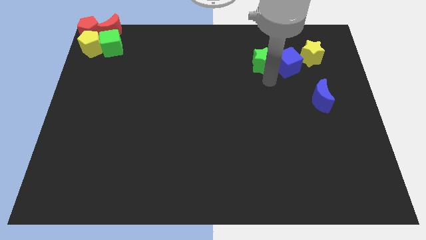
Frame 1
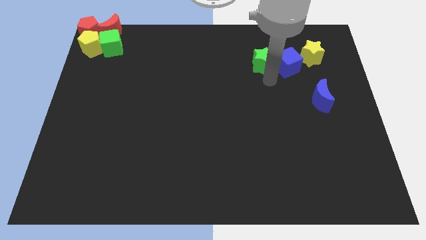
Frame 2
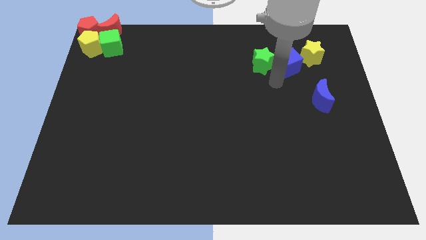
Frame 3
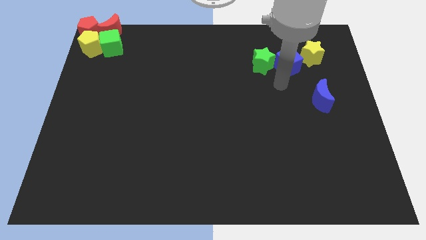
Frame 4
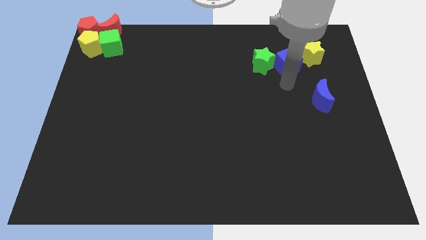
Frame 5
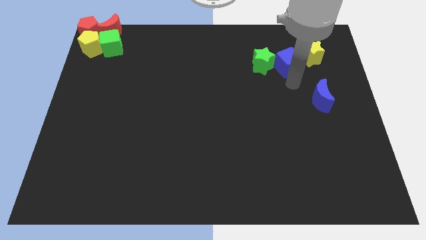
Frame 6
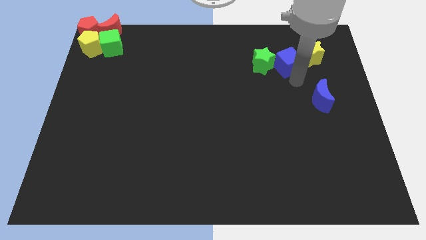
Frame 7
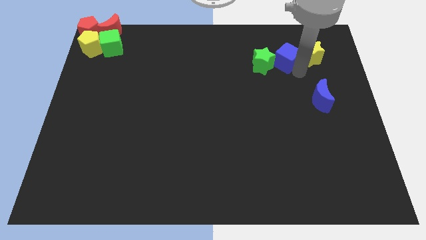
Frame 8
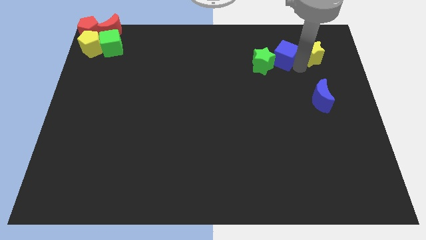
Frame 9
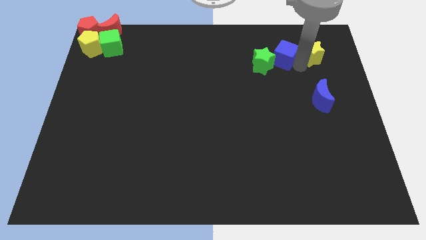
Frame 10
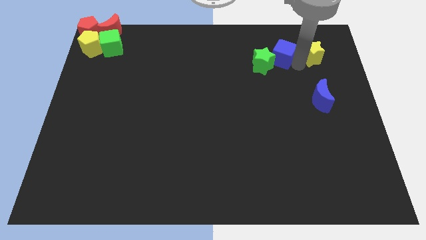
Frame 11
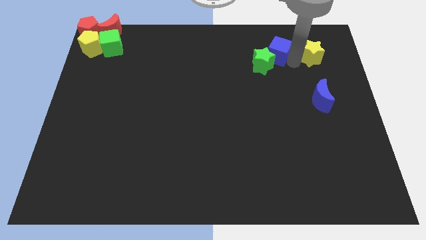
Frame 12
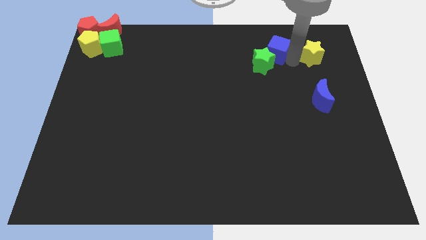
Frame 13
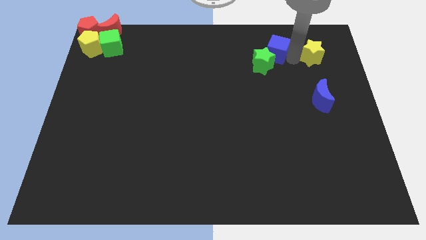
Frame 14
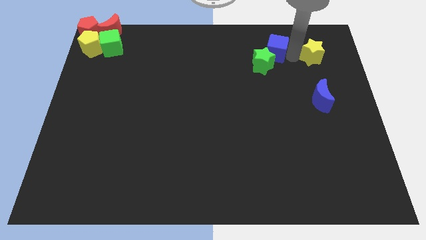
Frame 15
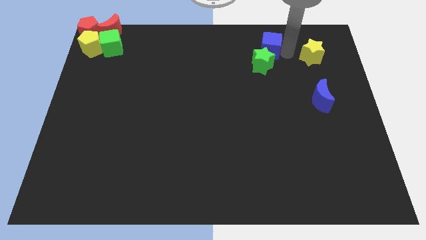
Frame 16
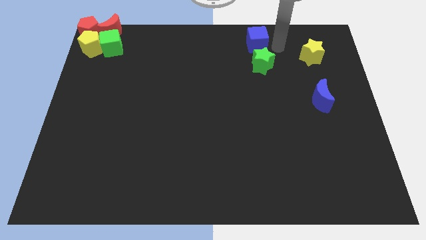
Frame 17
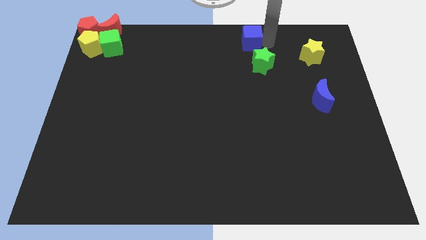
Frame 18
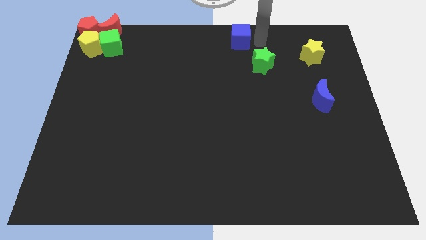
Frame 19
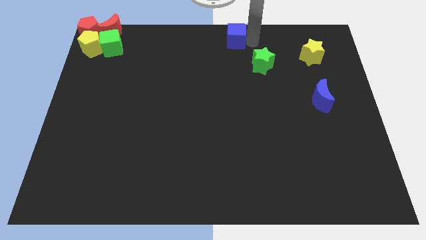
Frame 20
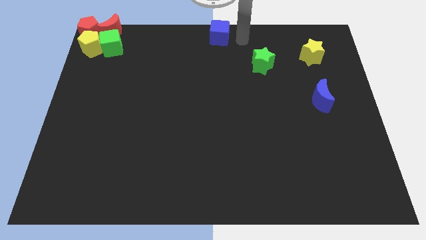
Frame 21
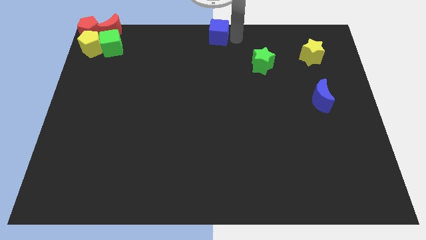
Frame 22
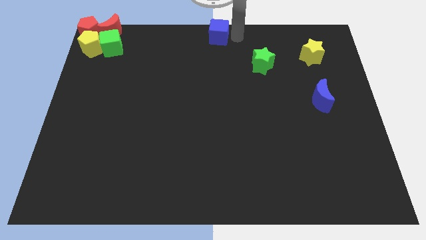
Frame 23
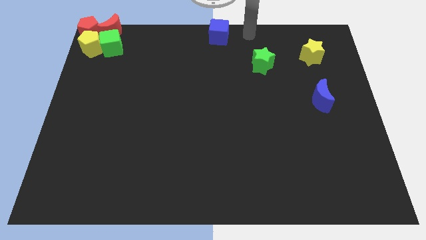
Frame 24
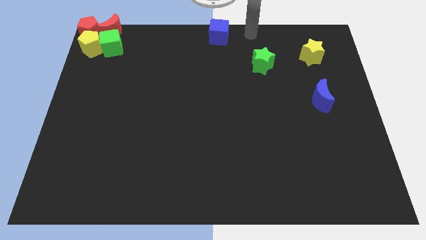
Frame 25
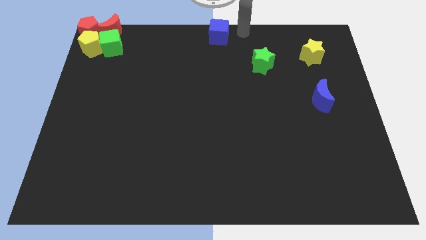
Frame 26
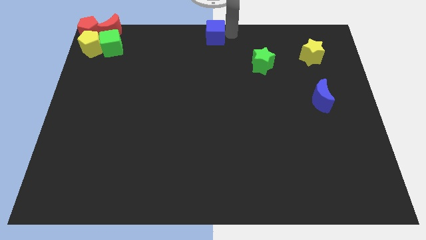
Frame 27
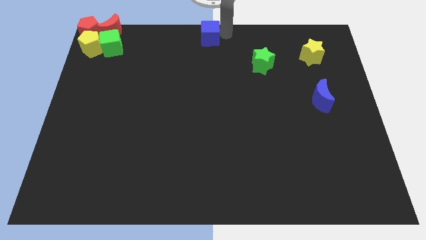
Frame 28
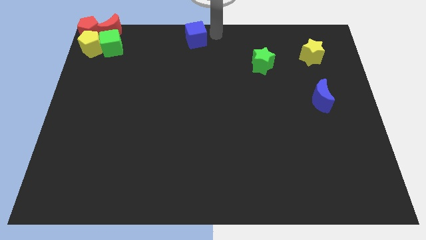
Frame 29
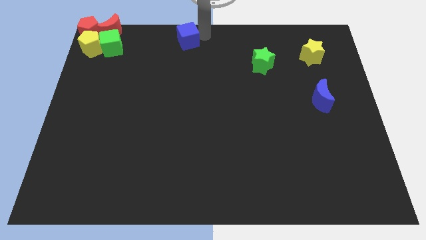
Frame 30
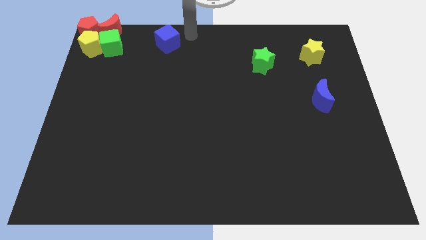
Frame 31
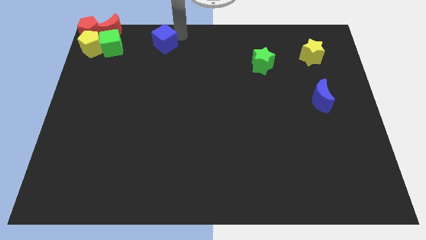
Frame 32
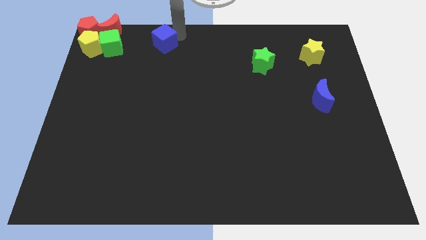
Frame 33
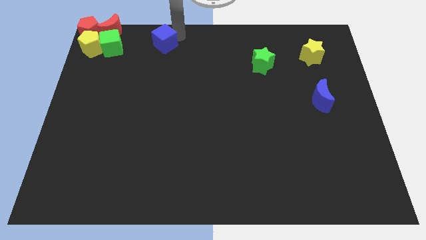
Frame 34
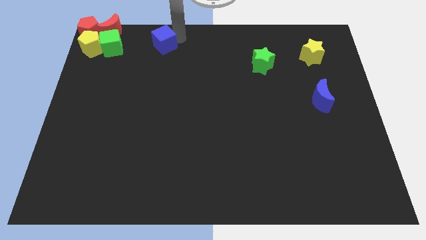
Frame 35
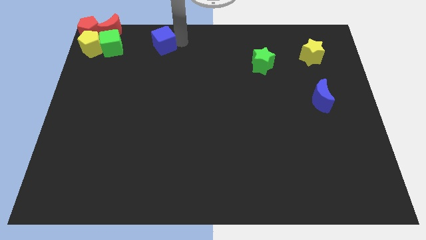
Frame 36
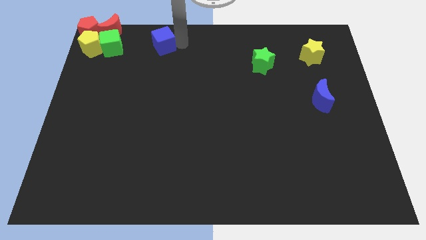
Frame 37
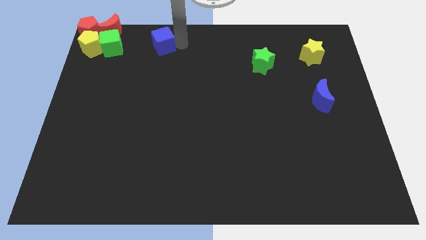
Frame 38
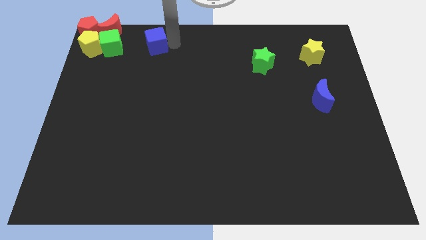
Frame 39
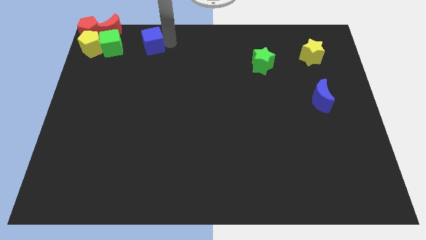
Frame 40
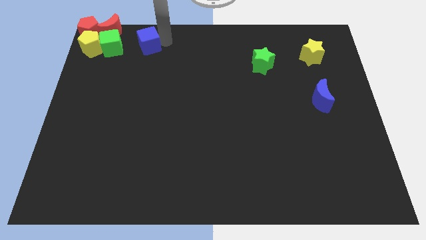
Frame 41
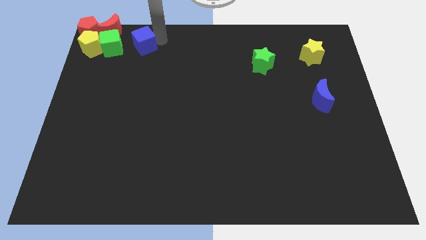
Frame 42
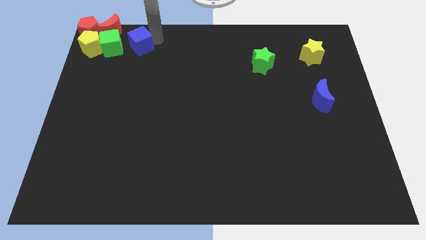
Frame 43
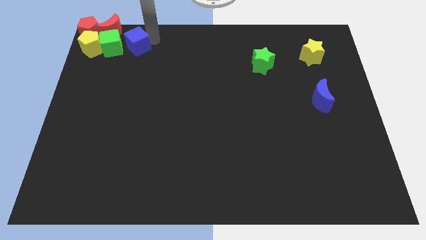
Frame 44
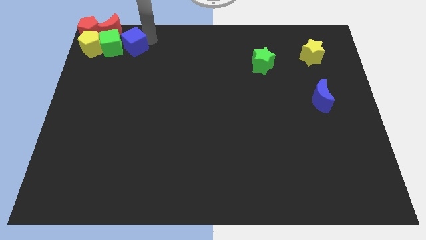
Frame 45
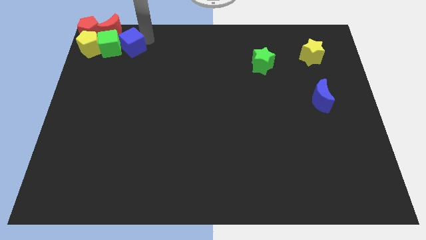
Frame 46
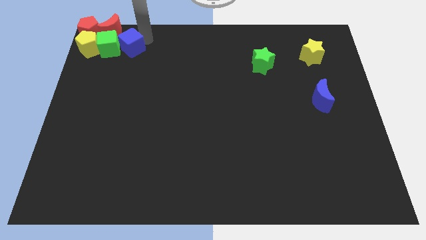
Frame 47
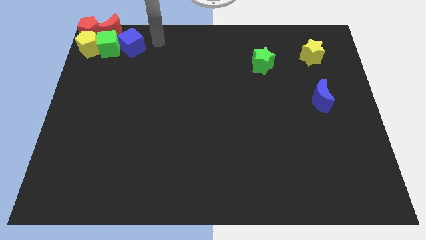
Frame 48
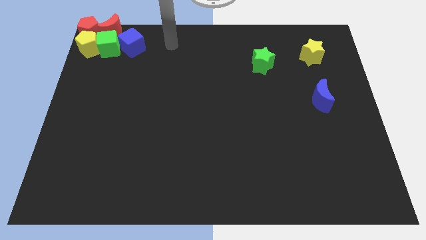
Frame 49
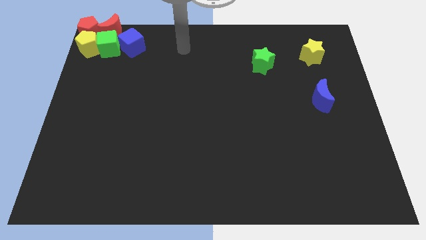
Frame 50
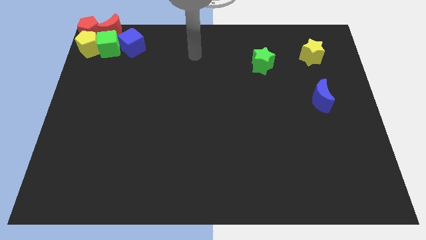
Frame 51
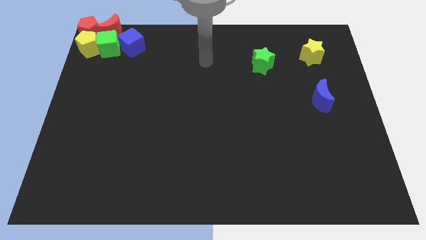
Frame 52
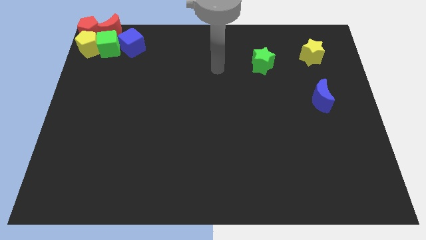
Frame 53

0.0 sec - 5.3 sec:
push the blue cube into the green cube

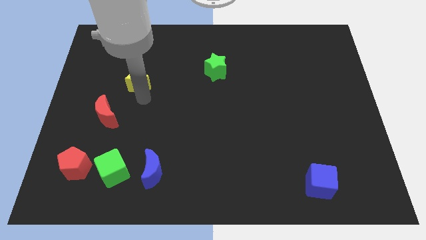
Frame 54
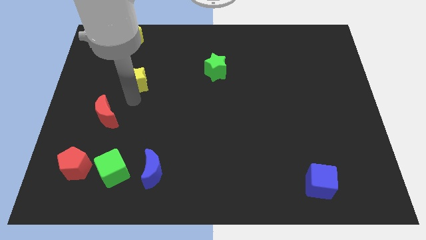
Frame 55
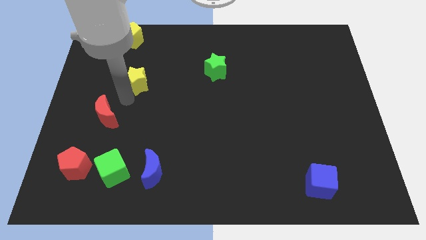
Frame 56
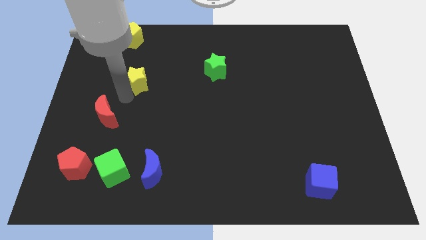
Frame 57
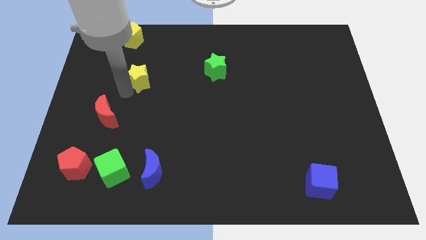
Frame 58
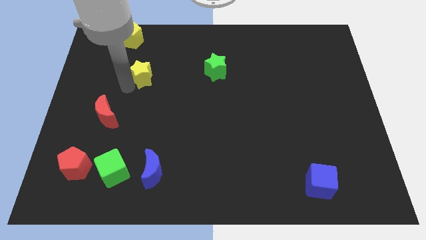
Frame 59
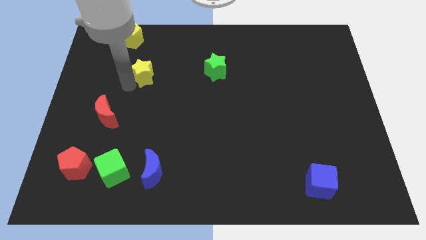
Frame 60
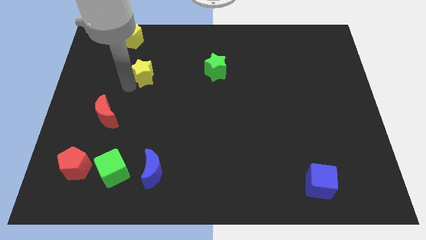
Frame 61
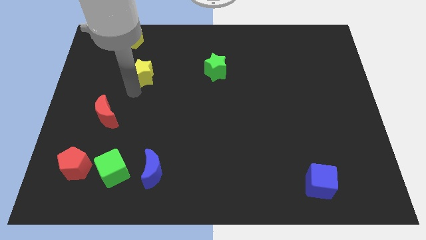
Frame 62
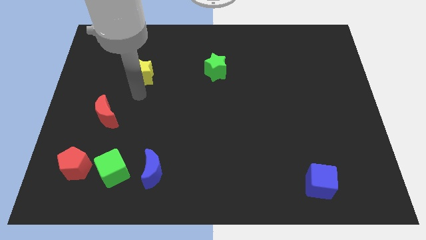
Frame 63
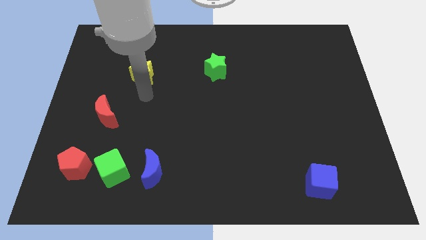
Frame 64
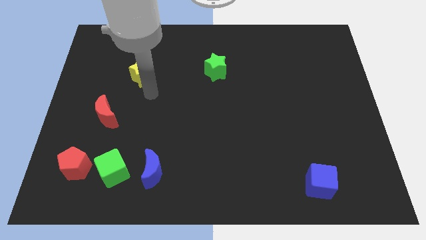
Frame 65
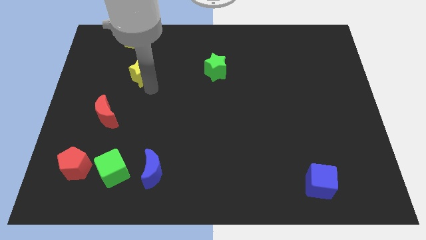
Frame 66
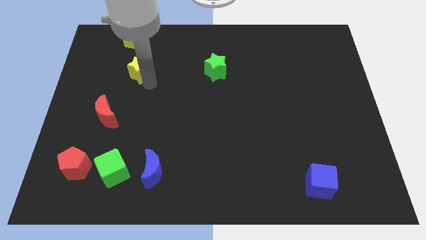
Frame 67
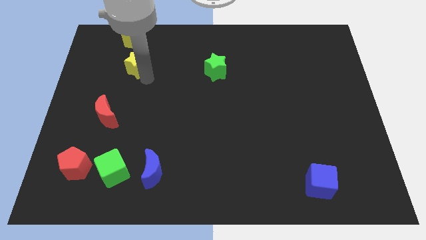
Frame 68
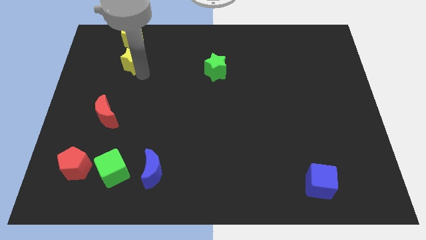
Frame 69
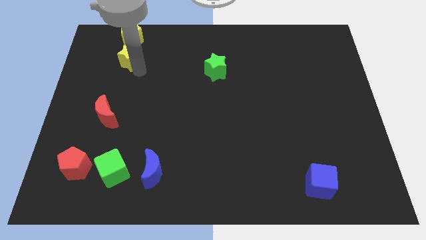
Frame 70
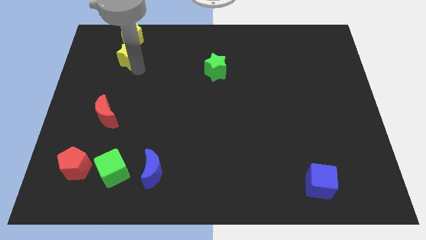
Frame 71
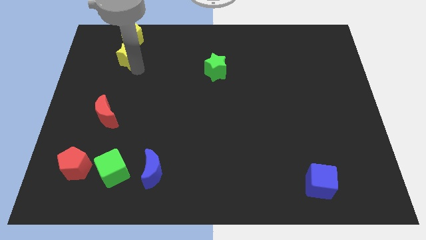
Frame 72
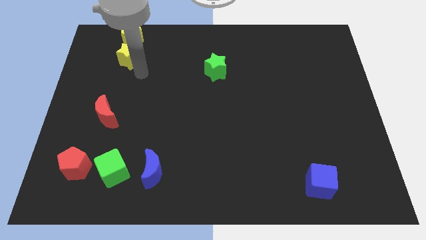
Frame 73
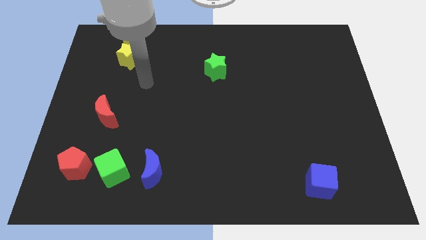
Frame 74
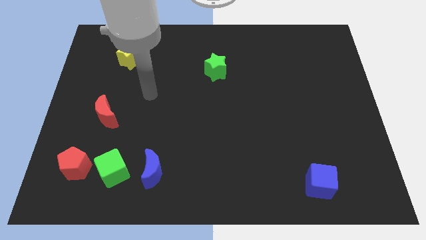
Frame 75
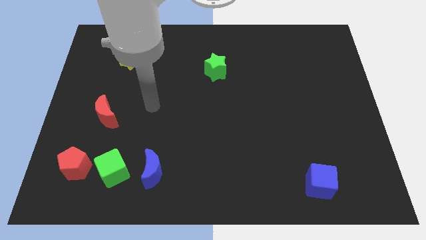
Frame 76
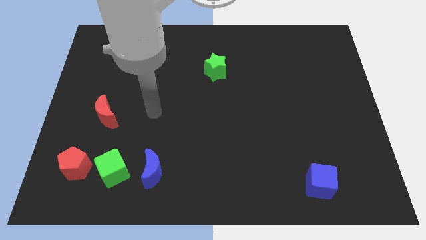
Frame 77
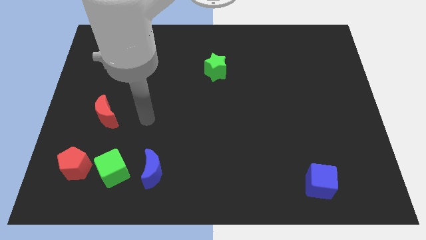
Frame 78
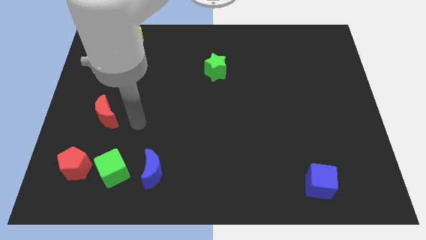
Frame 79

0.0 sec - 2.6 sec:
push the yellow star towards the yellow pentagon

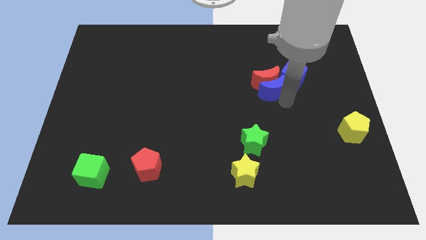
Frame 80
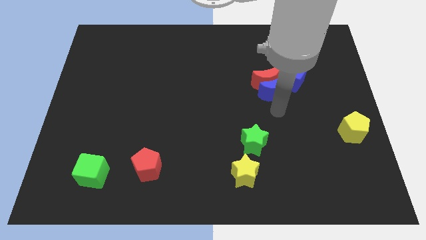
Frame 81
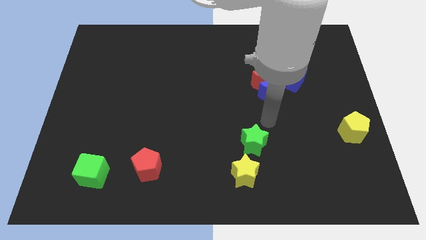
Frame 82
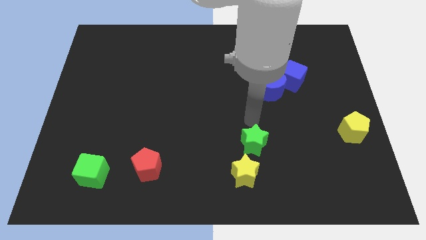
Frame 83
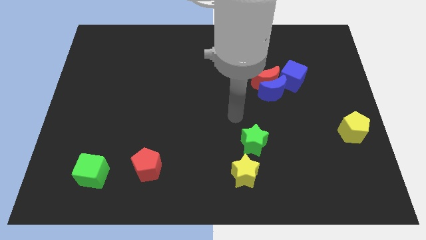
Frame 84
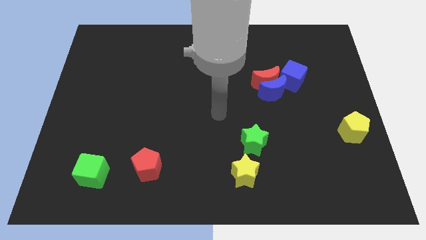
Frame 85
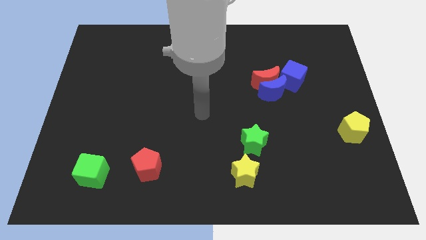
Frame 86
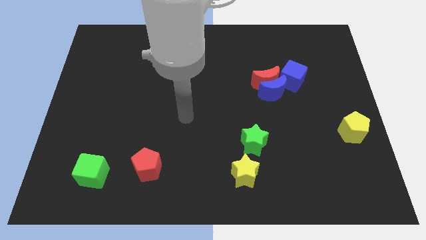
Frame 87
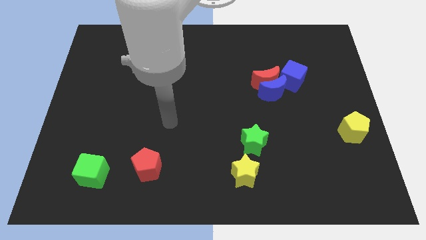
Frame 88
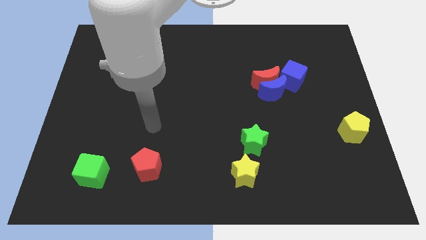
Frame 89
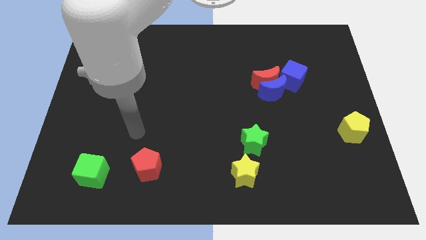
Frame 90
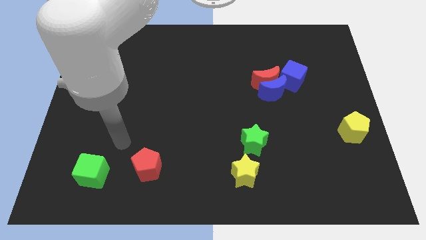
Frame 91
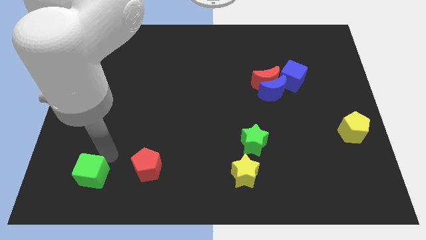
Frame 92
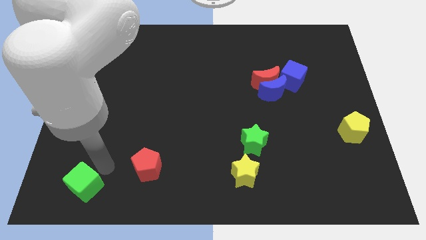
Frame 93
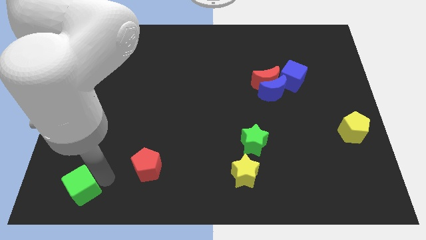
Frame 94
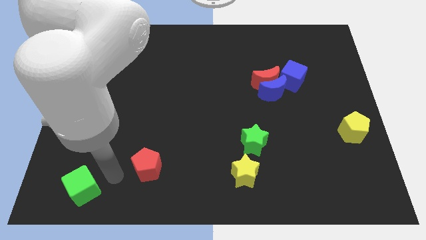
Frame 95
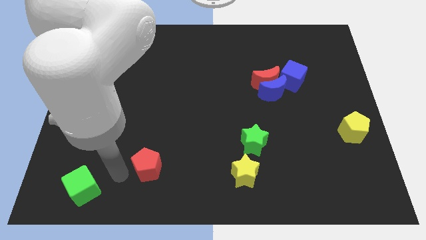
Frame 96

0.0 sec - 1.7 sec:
slightly push the green cube
